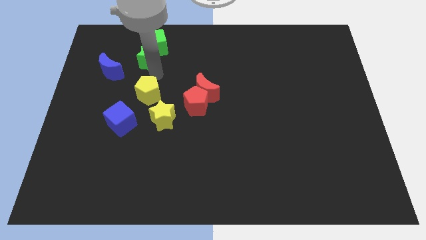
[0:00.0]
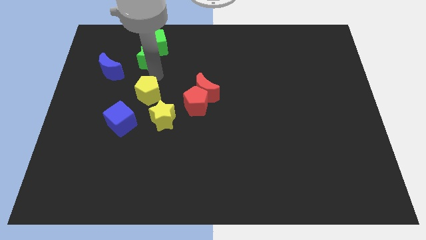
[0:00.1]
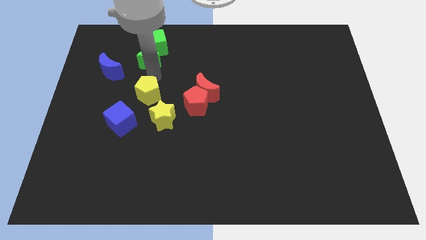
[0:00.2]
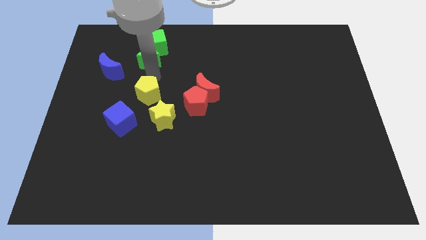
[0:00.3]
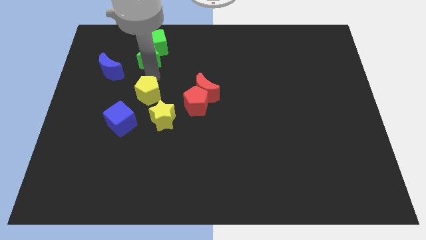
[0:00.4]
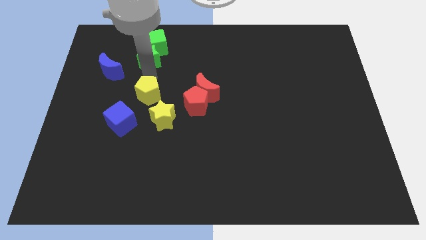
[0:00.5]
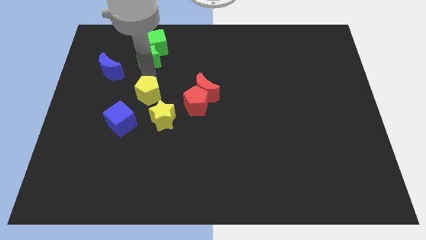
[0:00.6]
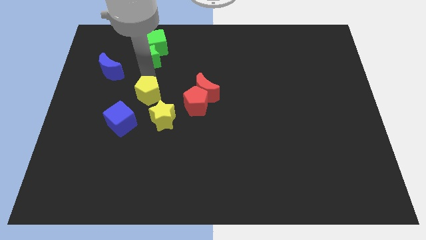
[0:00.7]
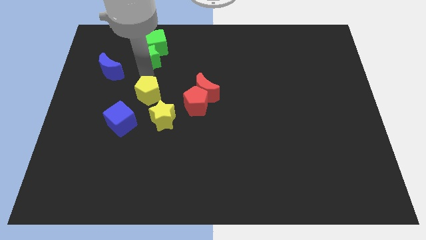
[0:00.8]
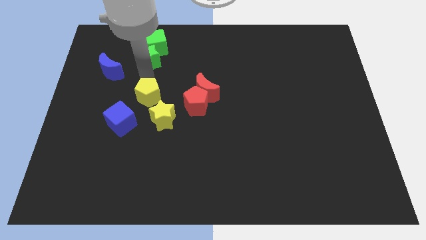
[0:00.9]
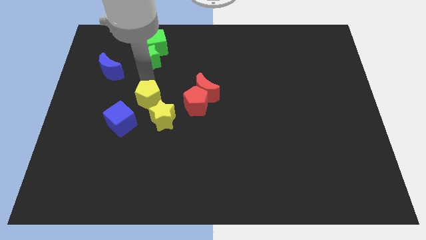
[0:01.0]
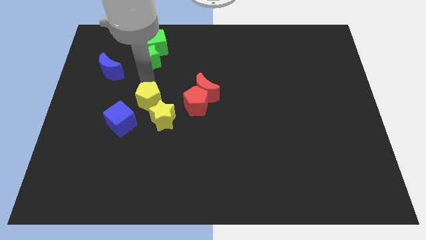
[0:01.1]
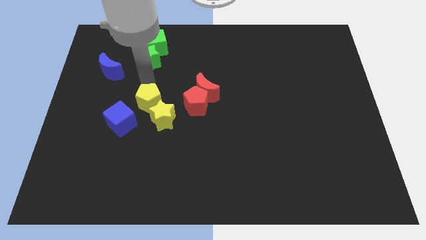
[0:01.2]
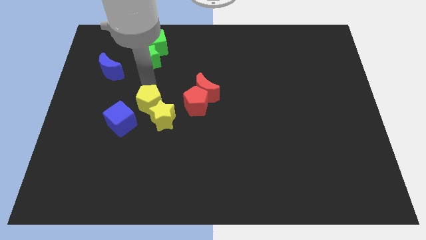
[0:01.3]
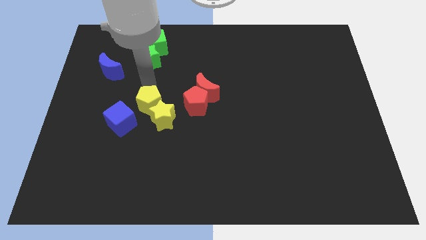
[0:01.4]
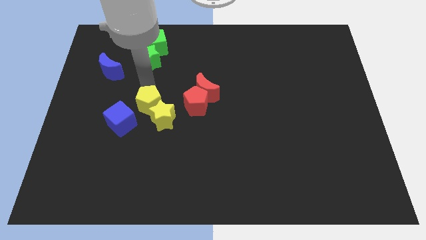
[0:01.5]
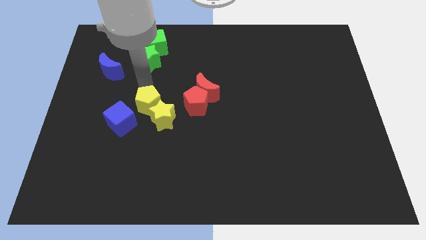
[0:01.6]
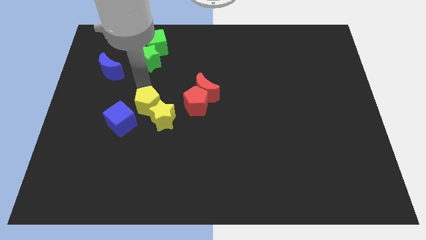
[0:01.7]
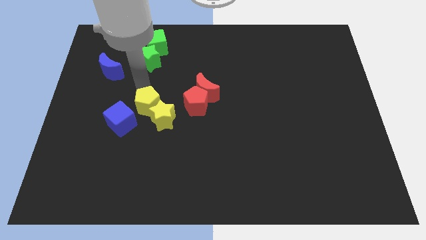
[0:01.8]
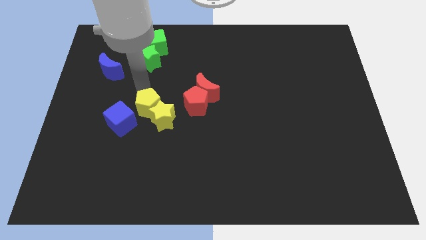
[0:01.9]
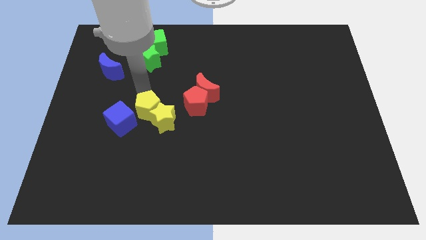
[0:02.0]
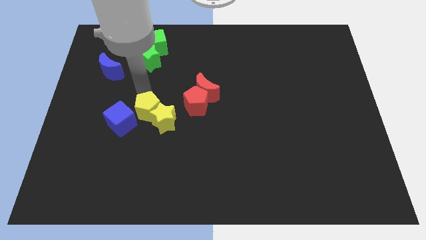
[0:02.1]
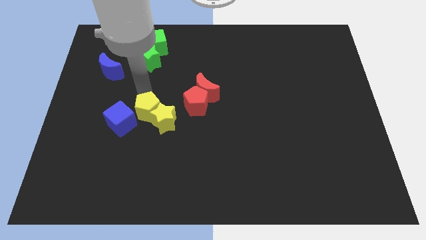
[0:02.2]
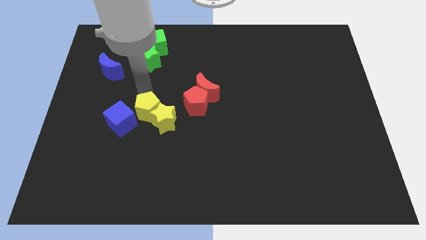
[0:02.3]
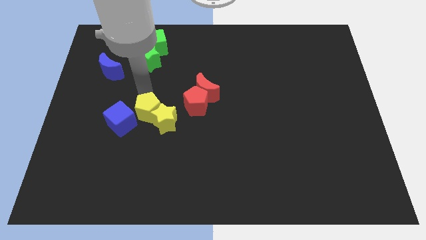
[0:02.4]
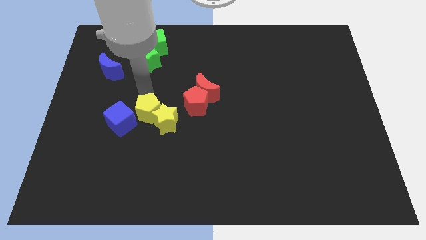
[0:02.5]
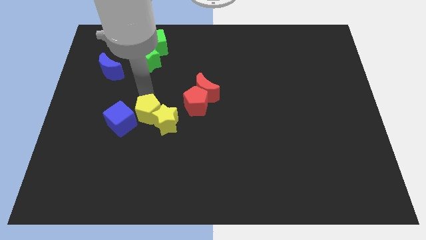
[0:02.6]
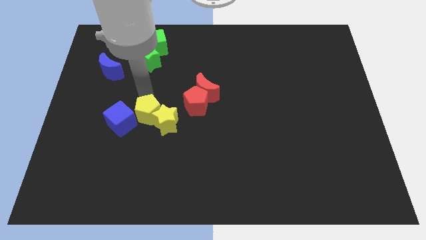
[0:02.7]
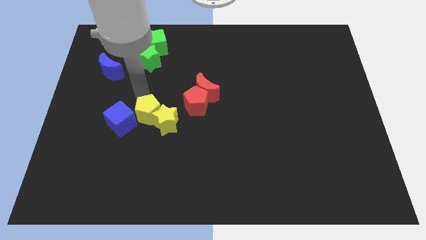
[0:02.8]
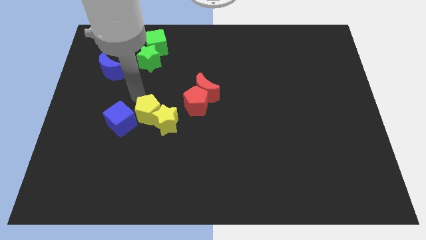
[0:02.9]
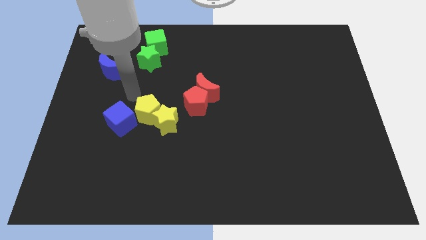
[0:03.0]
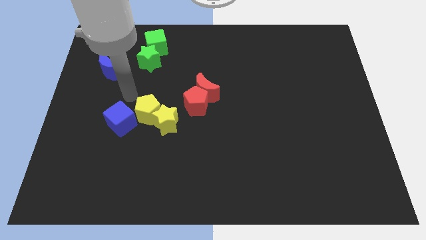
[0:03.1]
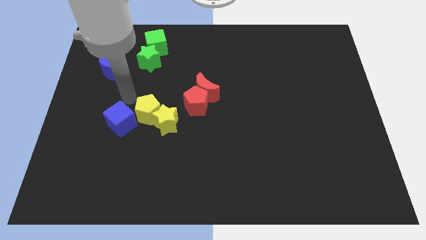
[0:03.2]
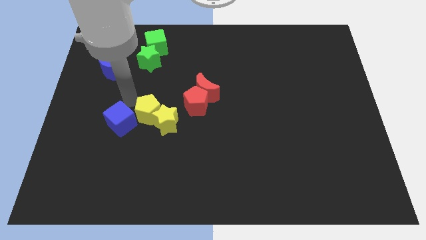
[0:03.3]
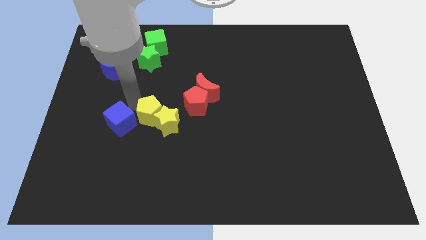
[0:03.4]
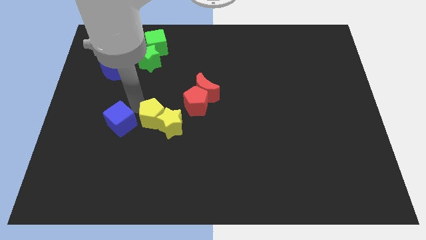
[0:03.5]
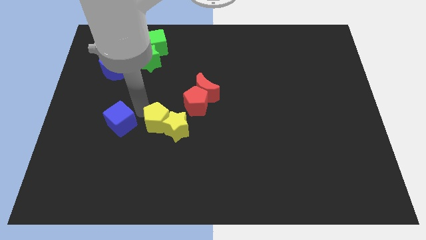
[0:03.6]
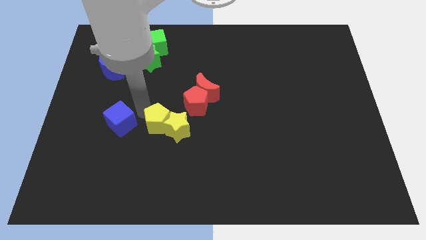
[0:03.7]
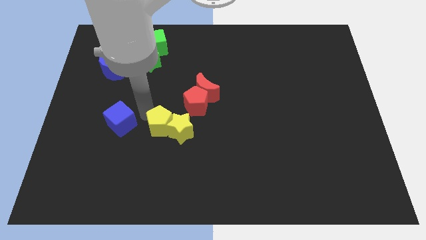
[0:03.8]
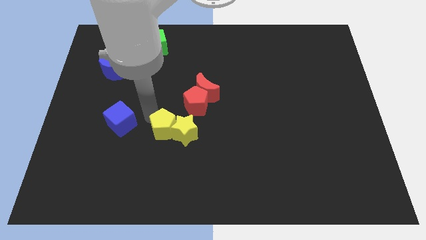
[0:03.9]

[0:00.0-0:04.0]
move the yellow pentagon and the yellow star to the bottom left side of the red pentagon

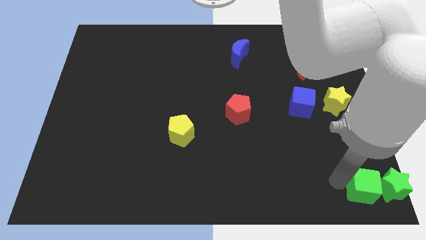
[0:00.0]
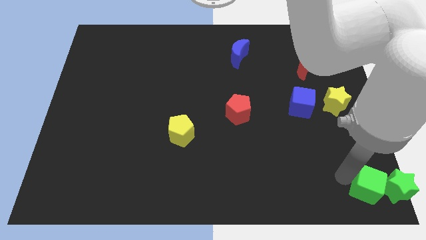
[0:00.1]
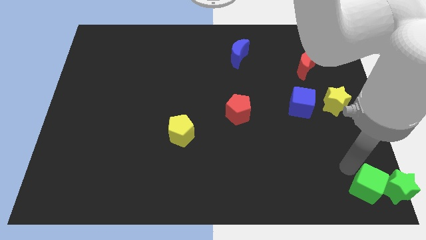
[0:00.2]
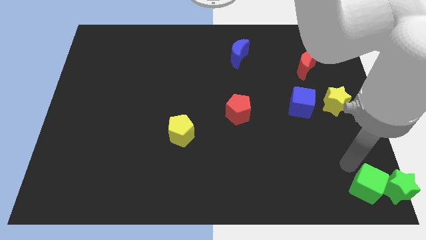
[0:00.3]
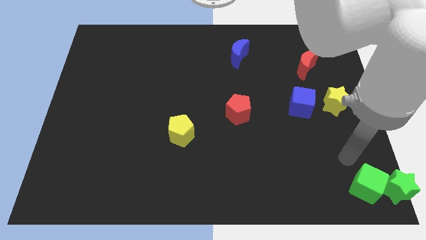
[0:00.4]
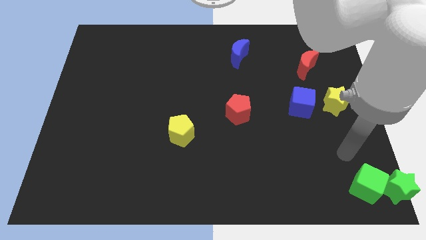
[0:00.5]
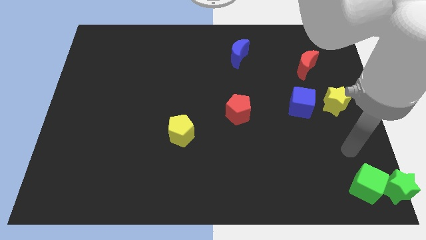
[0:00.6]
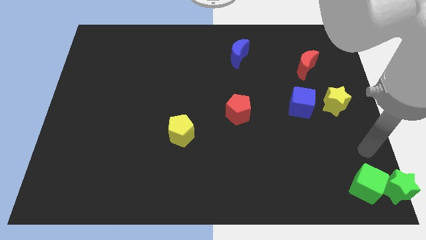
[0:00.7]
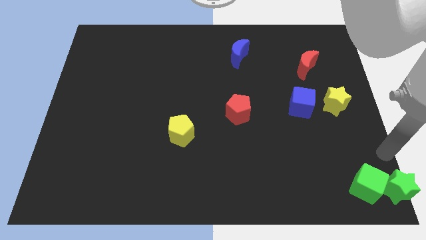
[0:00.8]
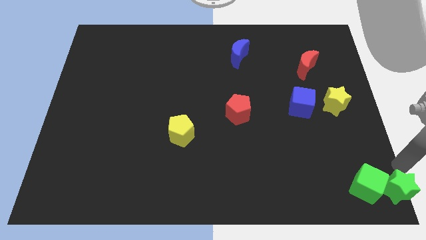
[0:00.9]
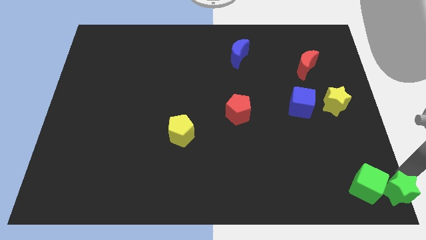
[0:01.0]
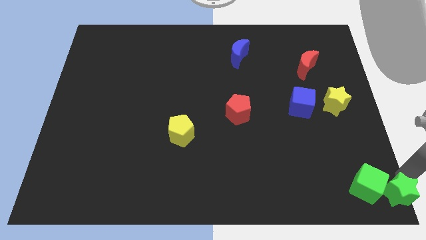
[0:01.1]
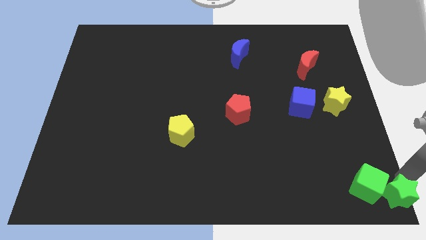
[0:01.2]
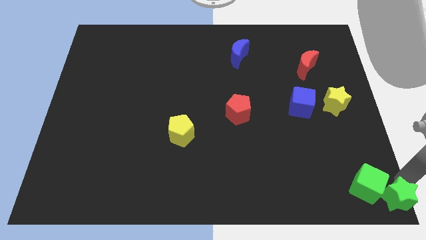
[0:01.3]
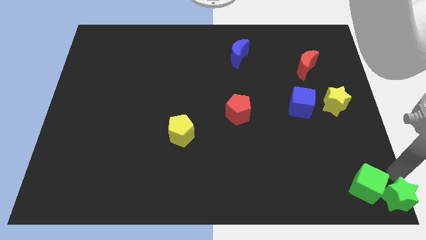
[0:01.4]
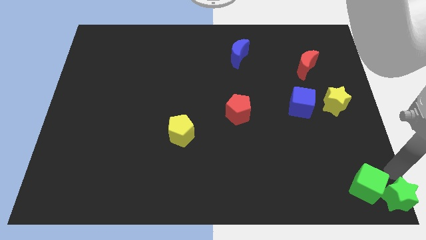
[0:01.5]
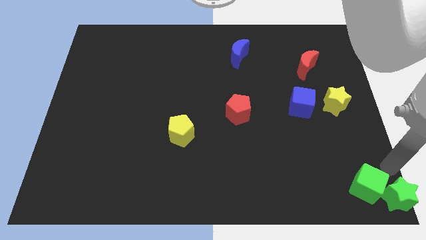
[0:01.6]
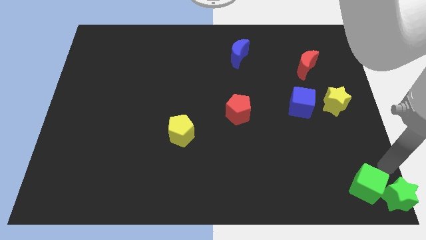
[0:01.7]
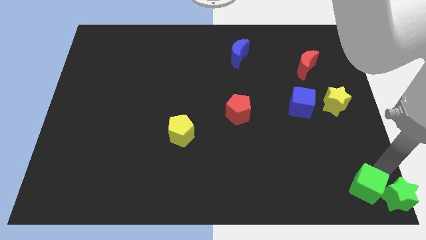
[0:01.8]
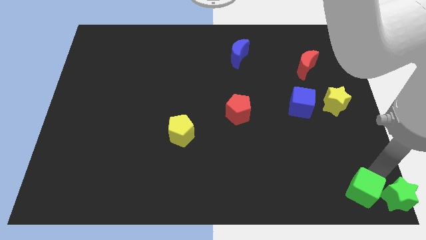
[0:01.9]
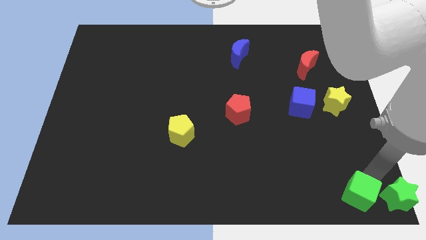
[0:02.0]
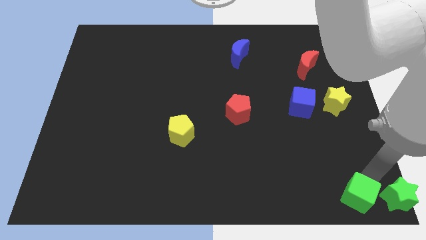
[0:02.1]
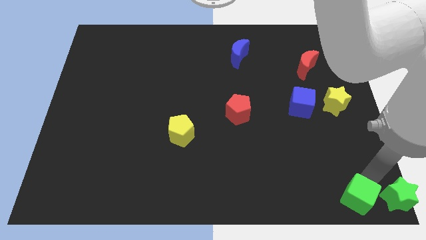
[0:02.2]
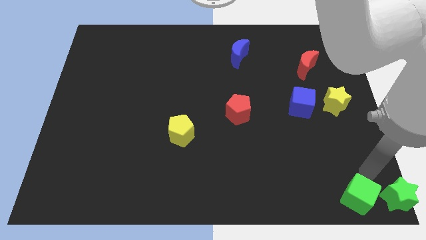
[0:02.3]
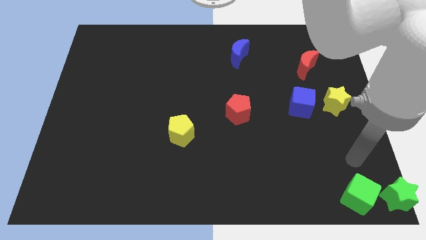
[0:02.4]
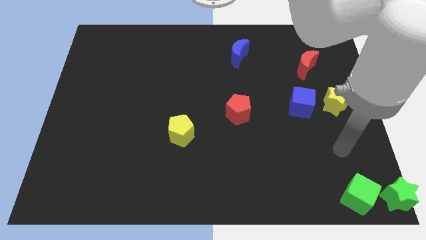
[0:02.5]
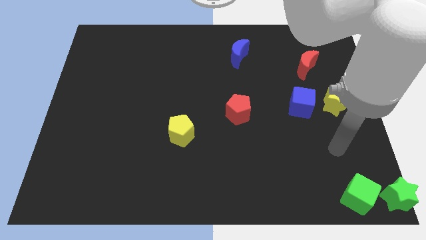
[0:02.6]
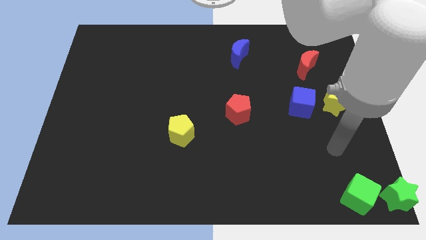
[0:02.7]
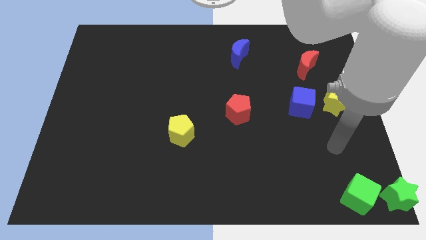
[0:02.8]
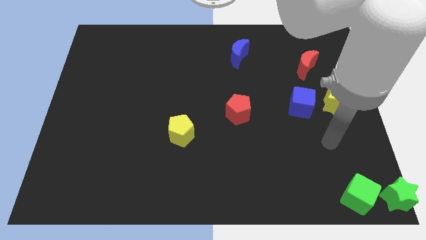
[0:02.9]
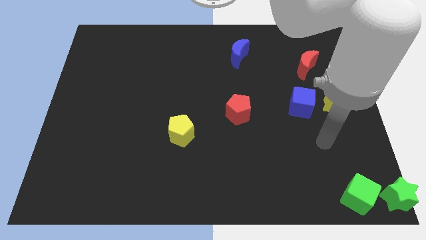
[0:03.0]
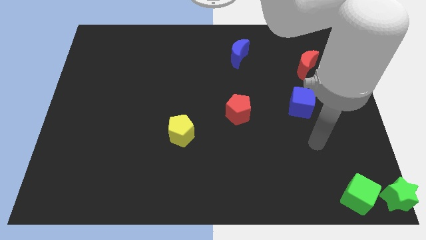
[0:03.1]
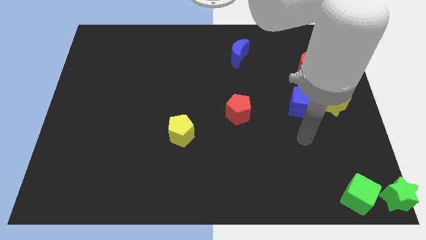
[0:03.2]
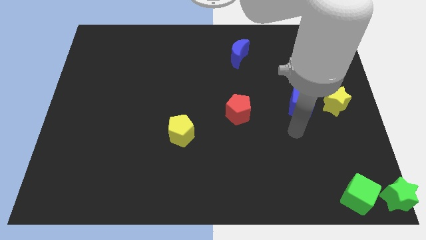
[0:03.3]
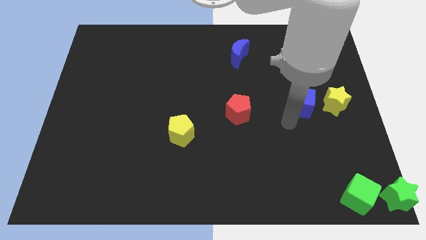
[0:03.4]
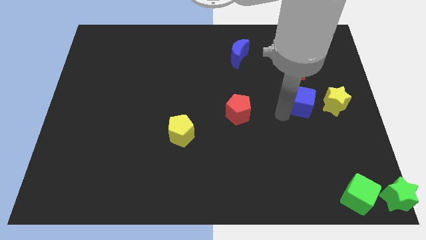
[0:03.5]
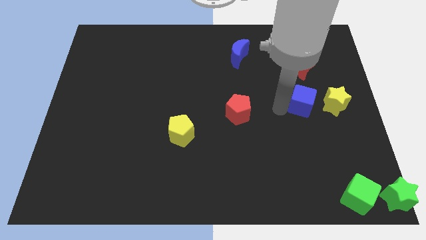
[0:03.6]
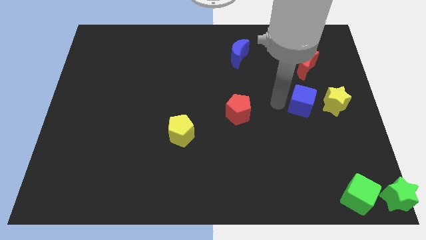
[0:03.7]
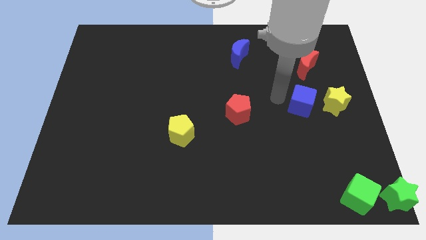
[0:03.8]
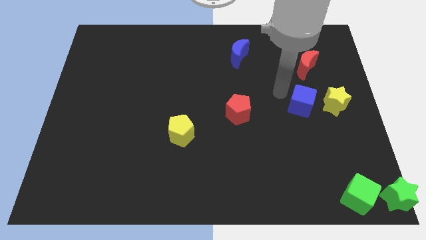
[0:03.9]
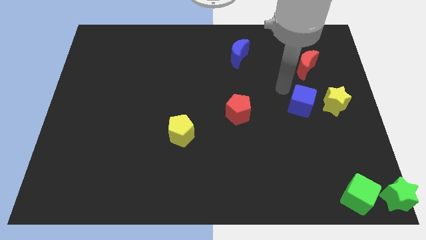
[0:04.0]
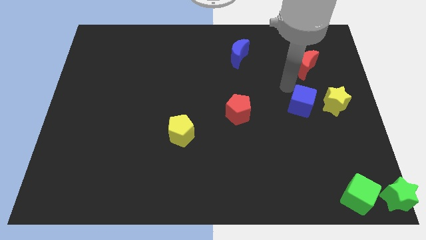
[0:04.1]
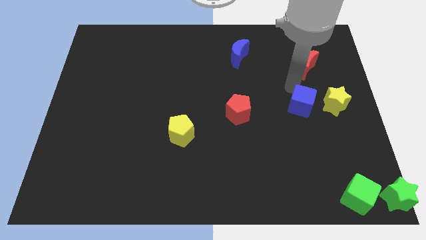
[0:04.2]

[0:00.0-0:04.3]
tap on the top of the blue cube

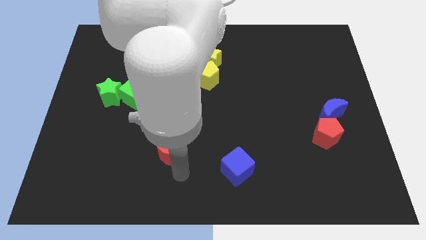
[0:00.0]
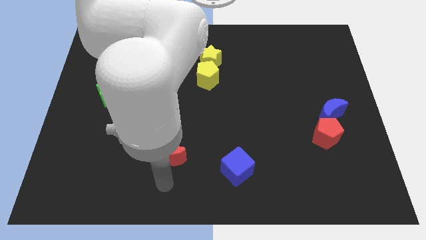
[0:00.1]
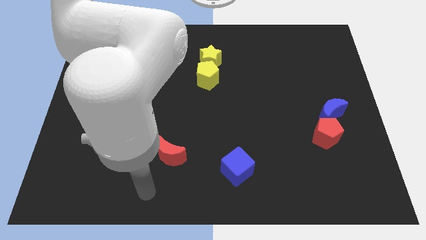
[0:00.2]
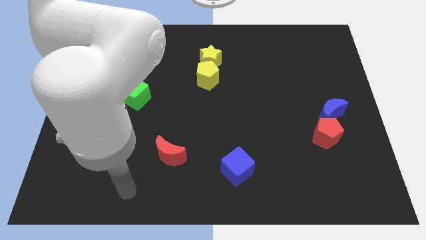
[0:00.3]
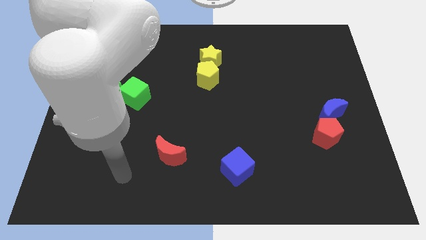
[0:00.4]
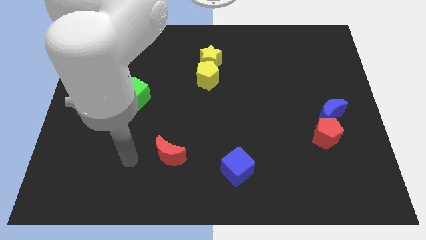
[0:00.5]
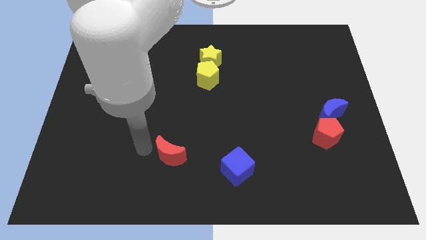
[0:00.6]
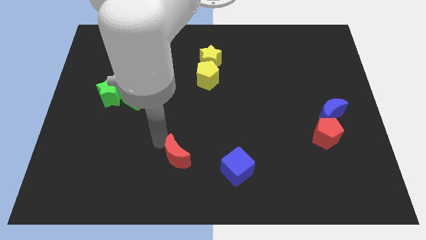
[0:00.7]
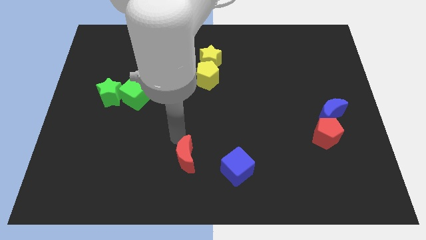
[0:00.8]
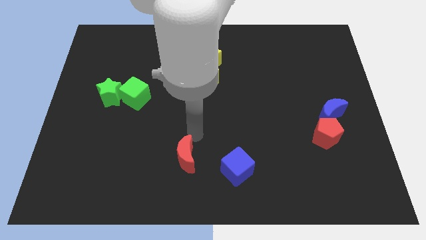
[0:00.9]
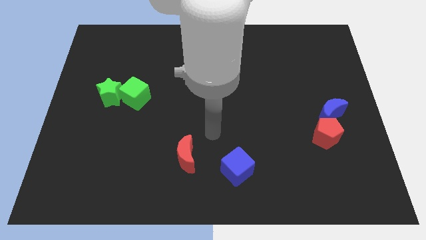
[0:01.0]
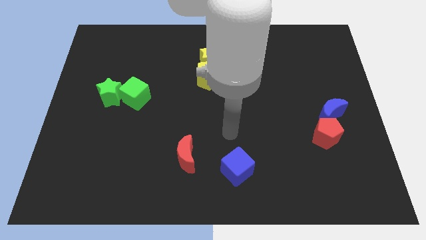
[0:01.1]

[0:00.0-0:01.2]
move the red moon slightly towards the blue cube
